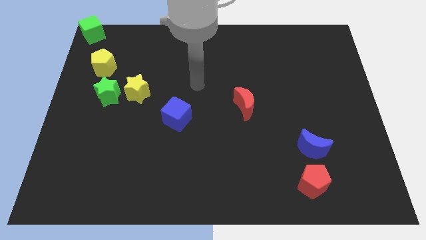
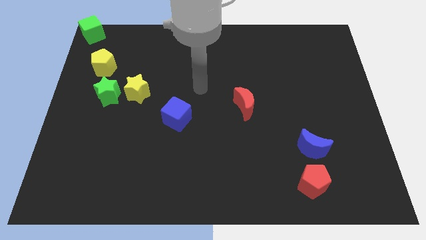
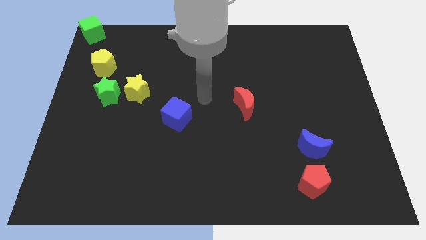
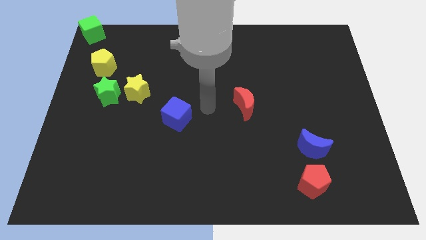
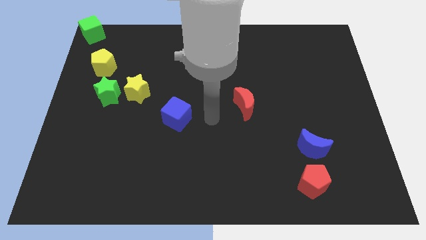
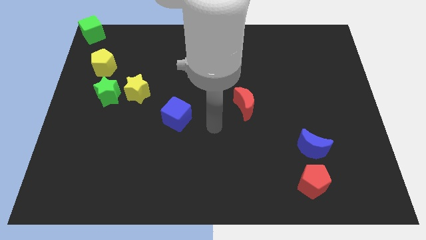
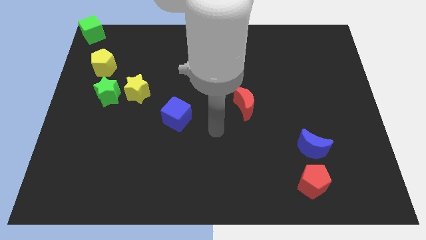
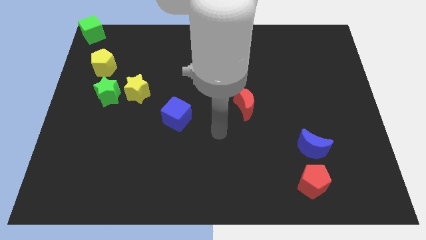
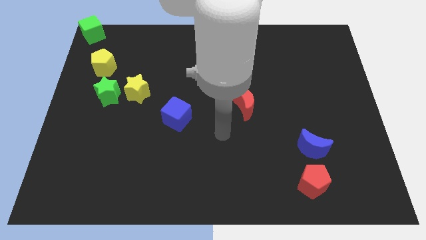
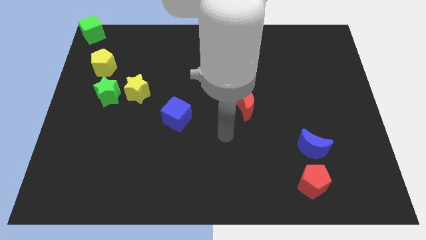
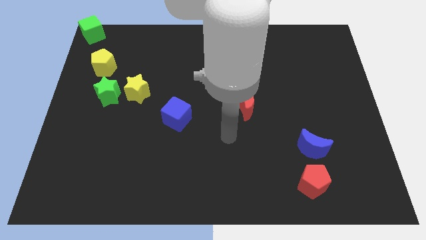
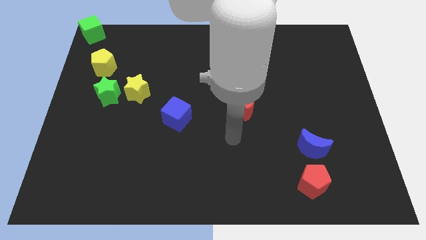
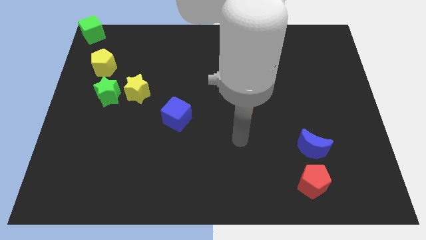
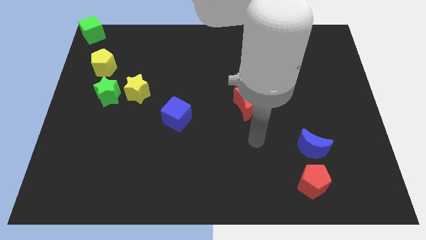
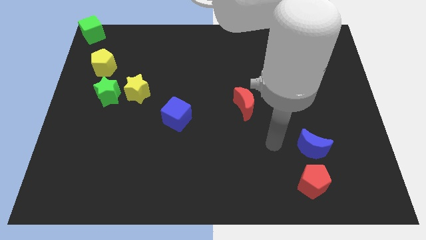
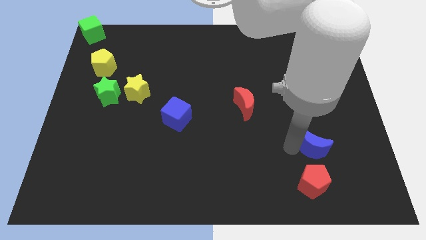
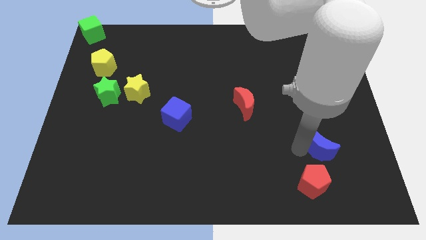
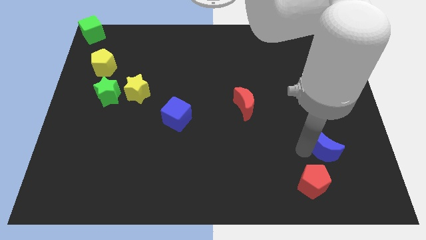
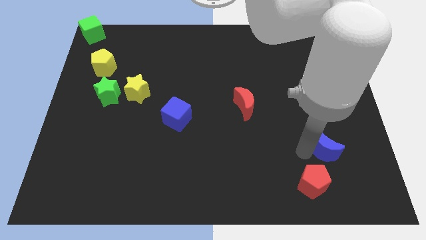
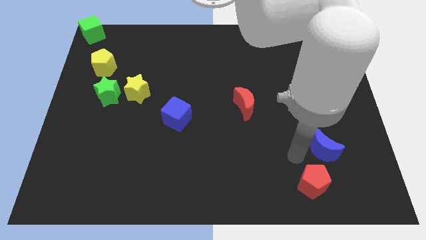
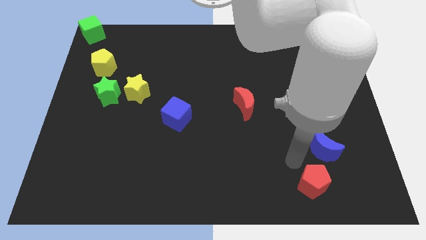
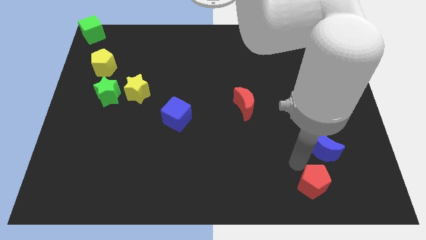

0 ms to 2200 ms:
touch the left of the blue moon

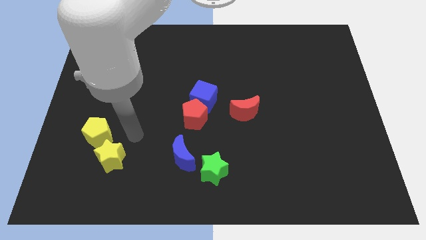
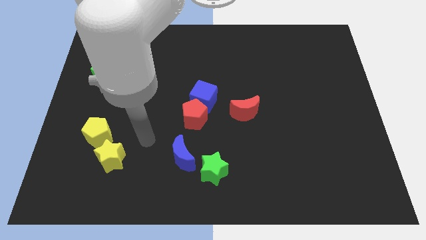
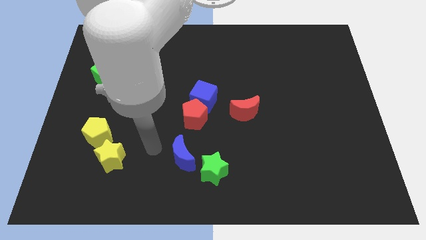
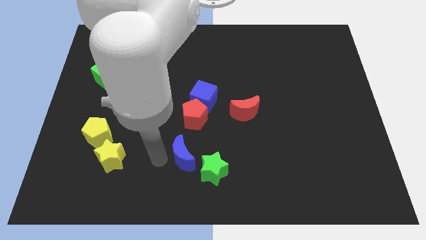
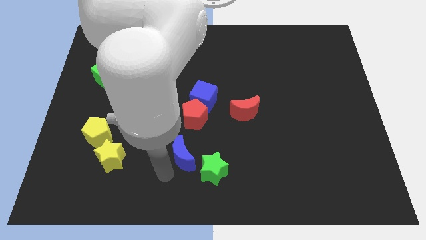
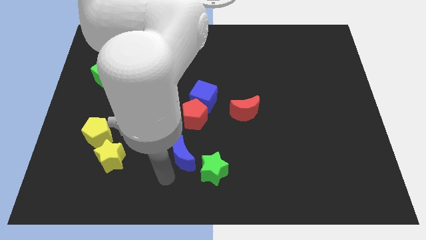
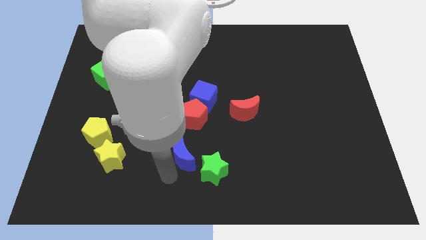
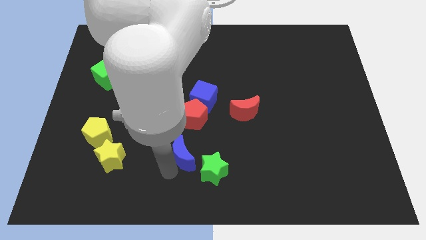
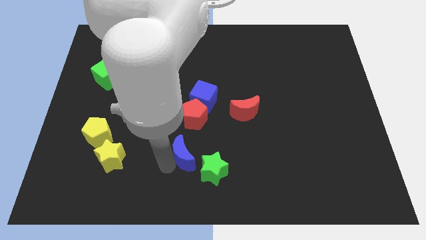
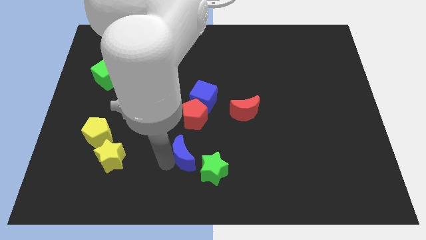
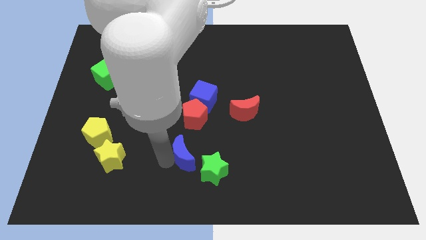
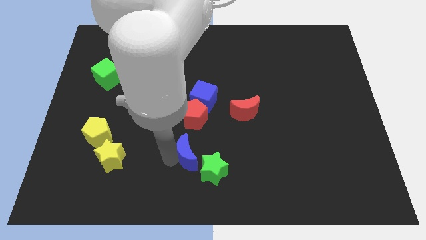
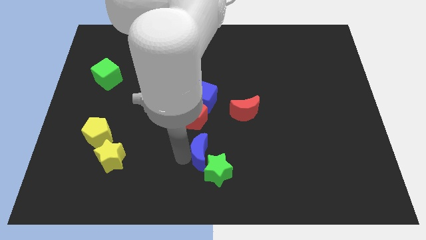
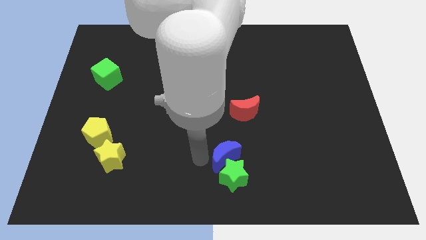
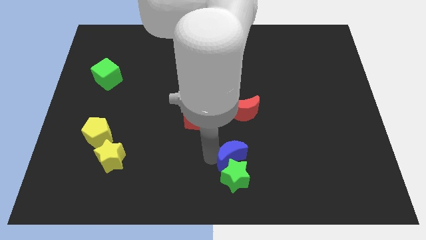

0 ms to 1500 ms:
place the blue crescent above the green star

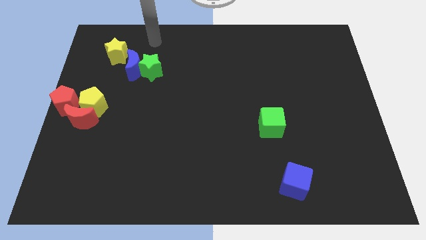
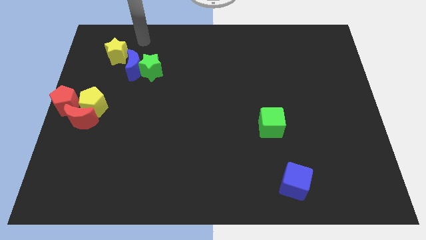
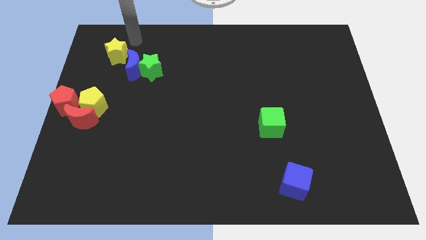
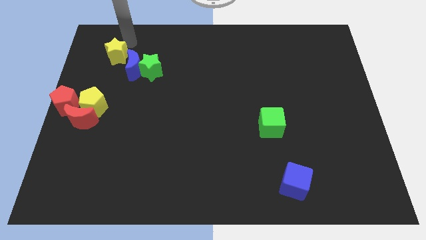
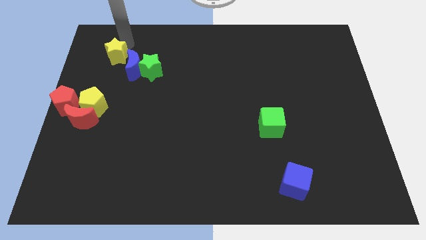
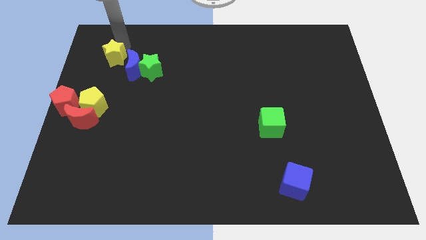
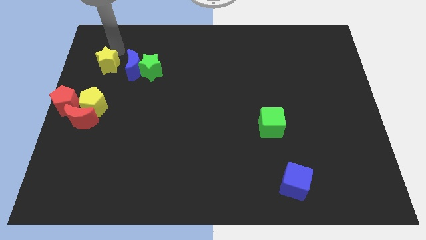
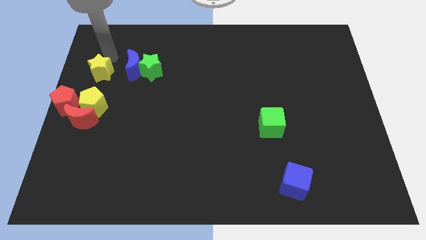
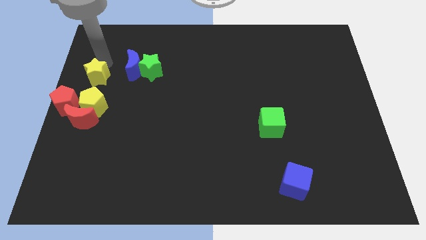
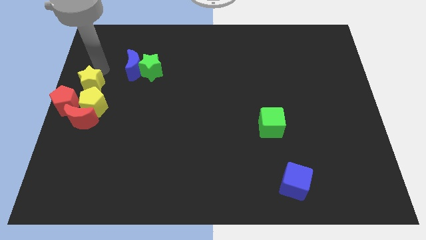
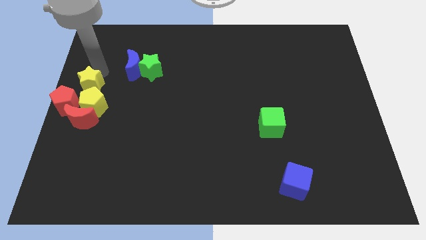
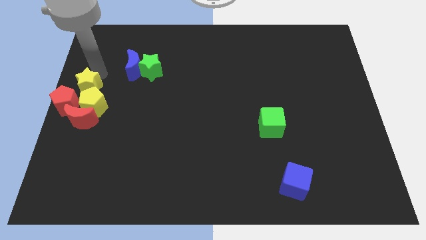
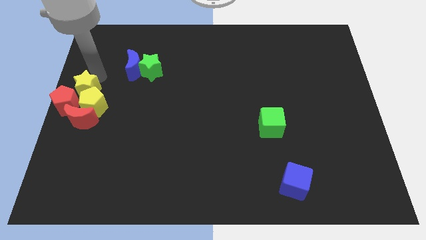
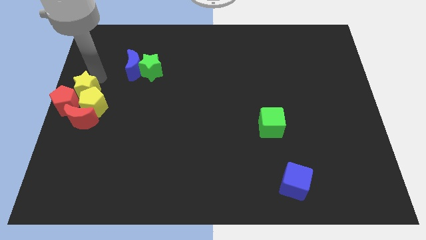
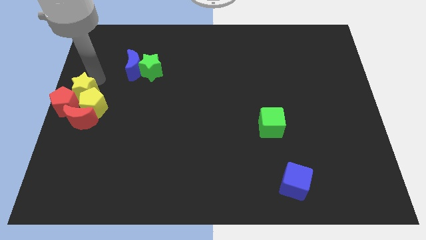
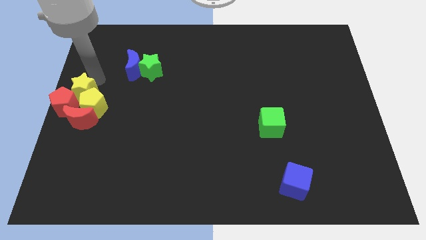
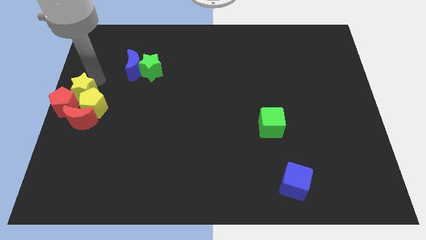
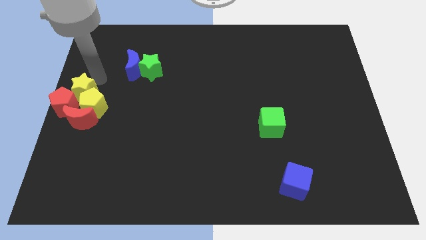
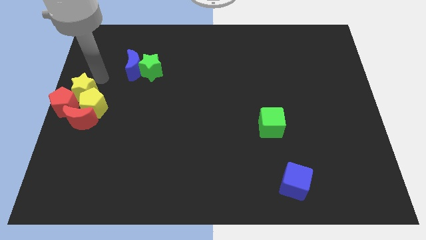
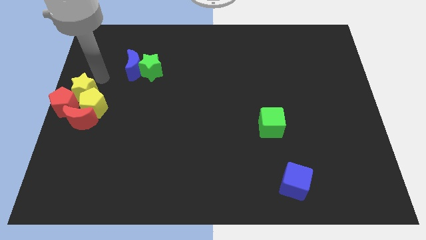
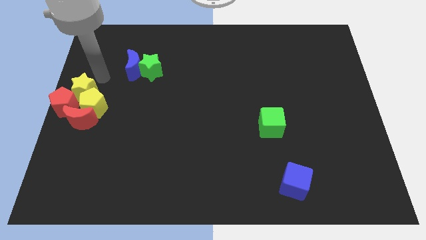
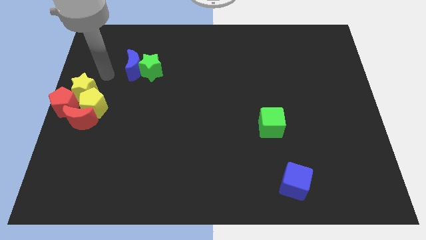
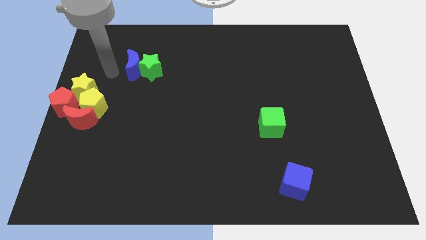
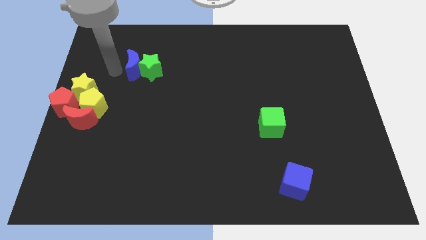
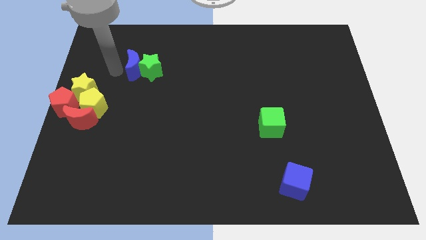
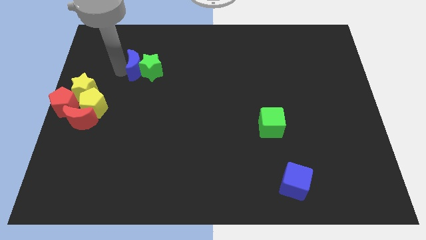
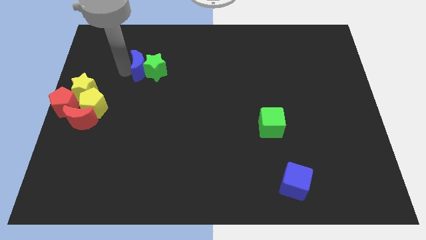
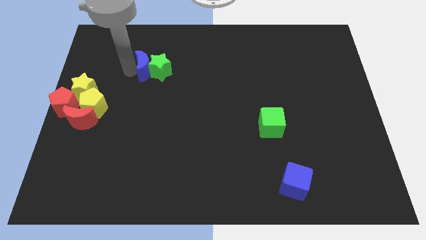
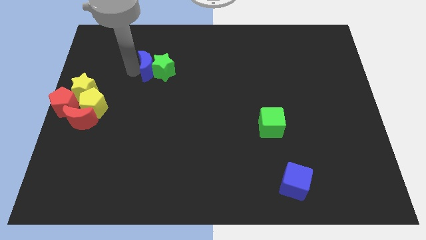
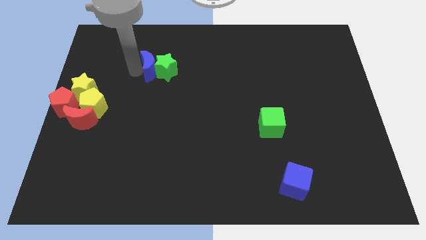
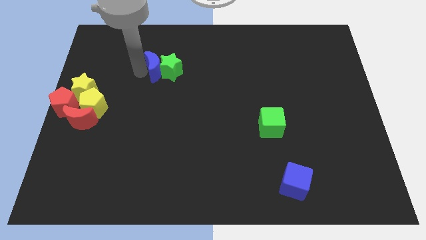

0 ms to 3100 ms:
make a group of red and yellow blocks

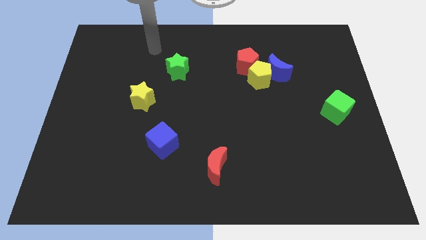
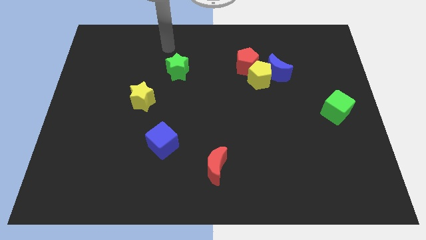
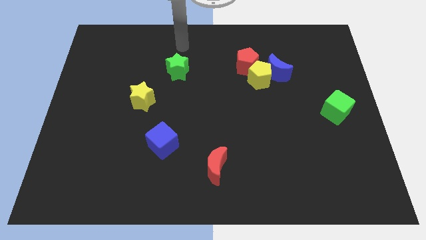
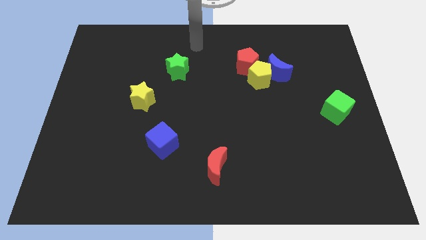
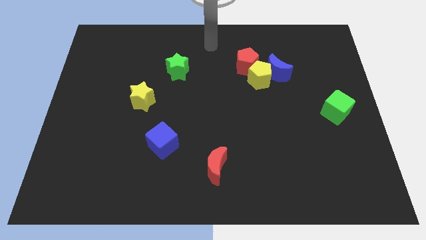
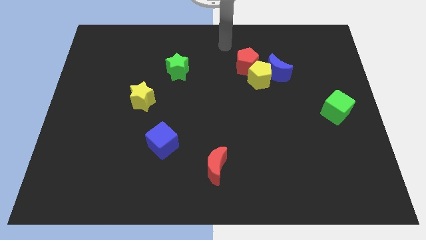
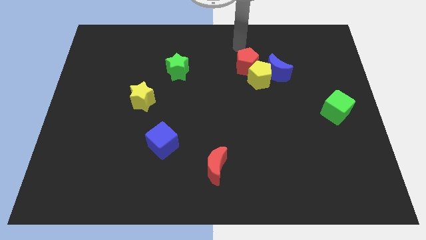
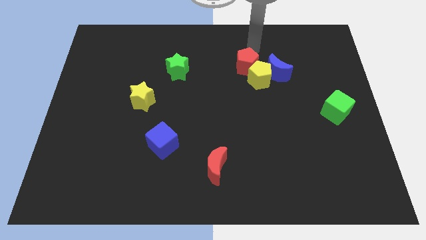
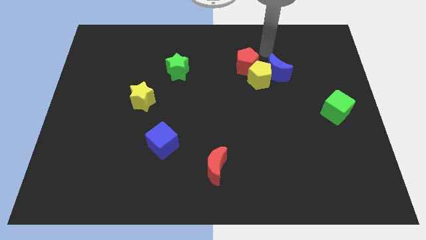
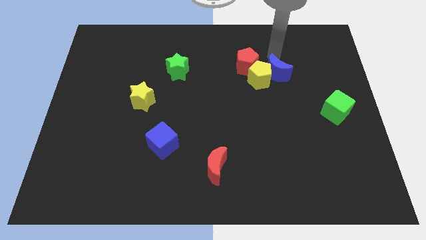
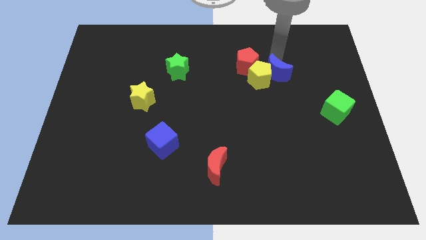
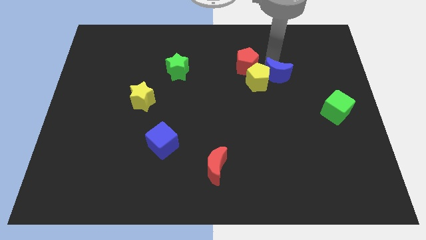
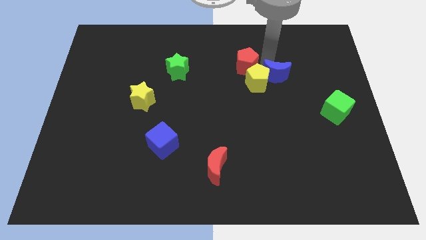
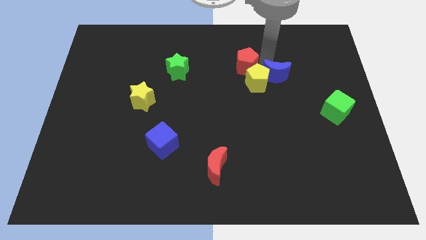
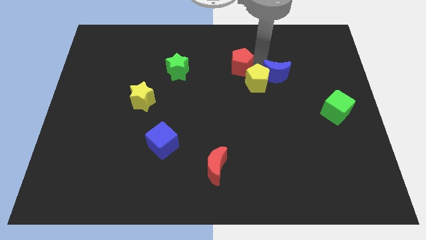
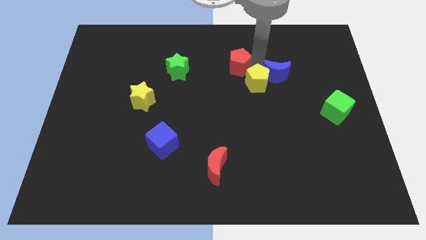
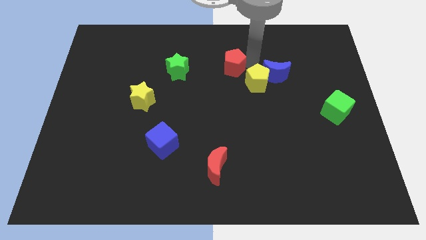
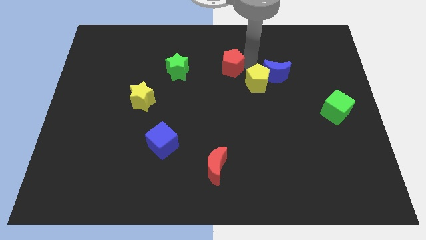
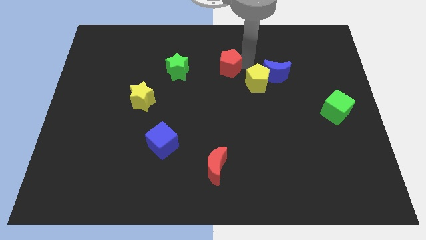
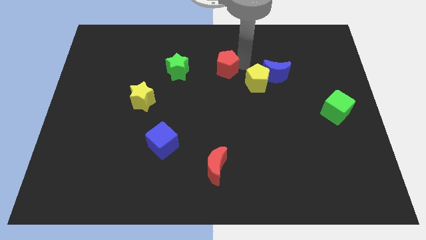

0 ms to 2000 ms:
push the red pentagon towards the green star

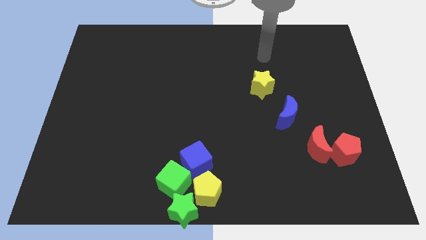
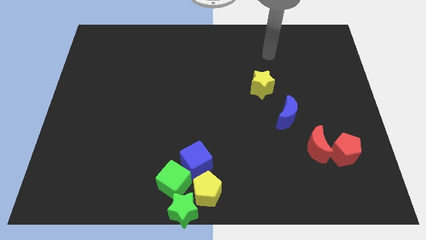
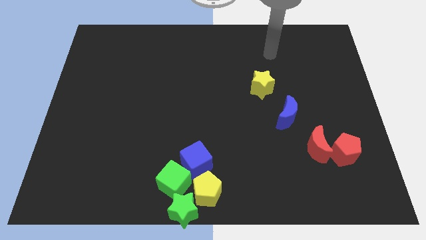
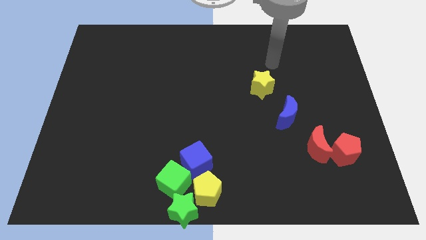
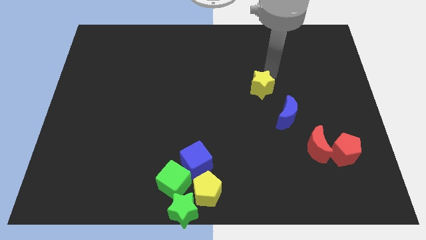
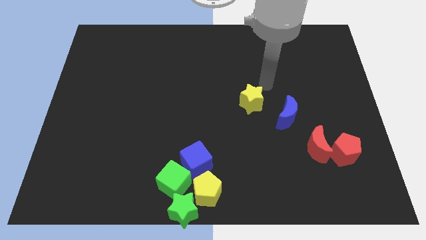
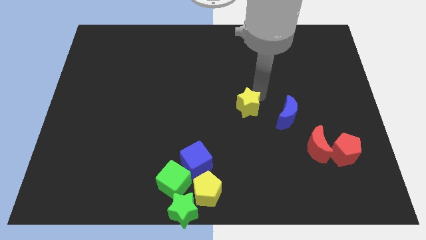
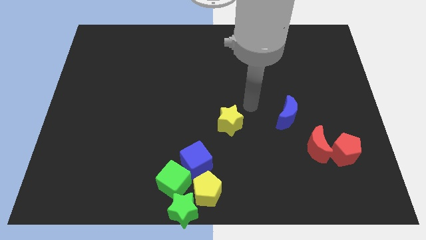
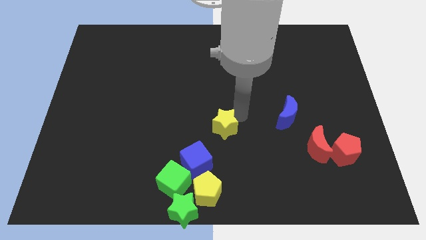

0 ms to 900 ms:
move the yellow star diagonally top right to the blue cube
